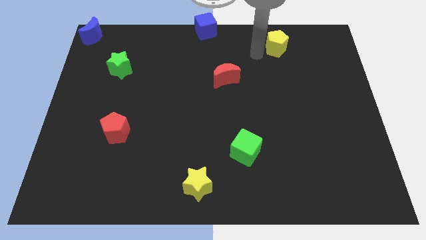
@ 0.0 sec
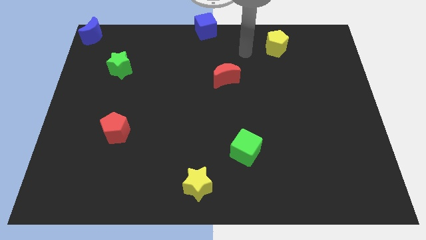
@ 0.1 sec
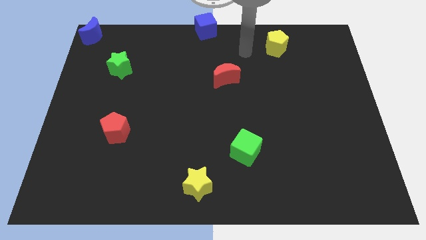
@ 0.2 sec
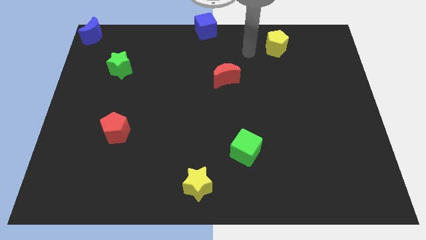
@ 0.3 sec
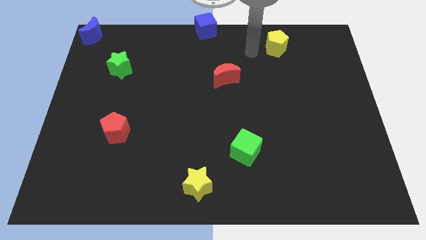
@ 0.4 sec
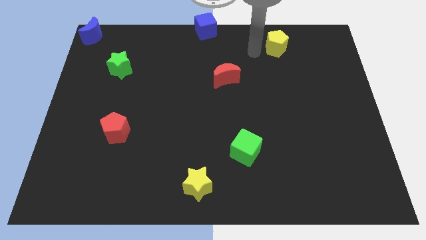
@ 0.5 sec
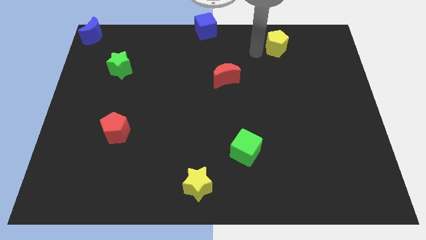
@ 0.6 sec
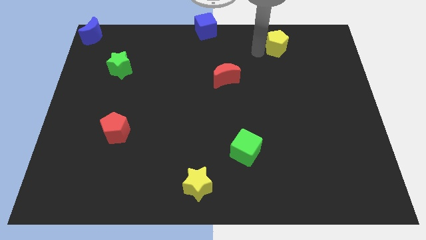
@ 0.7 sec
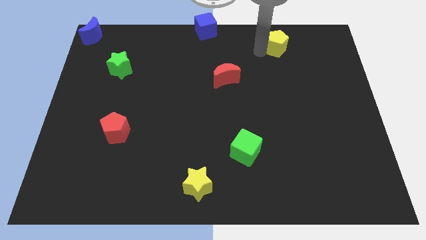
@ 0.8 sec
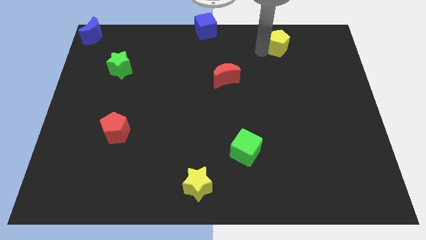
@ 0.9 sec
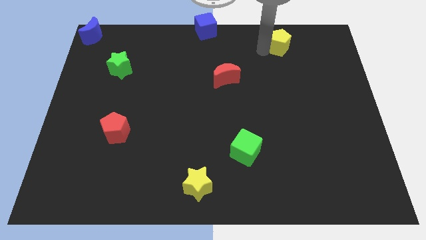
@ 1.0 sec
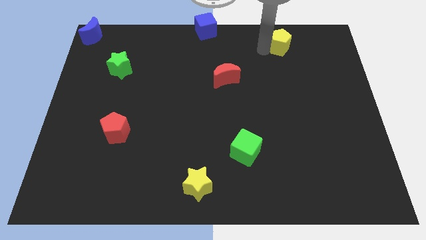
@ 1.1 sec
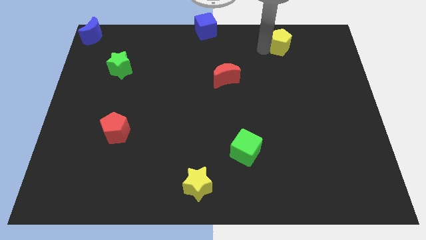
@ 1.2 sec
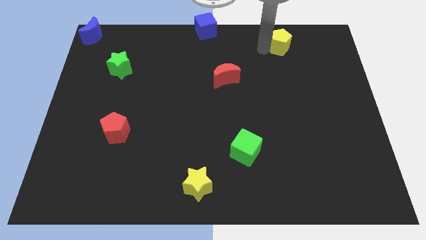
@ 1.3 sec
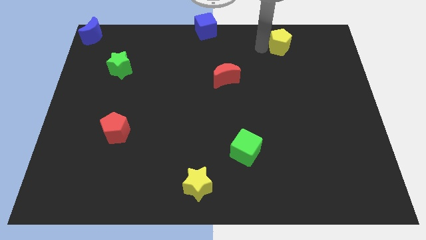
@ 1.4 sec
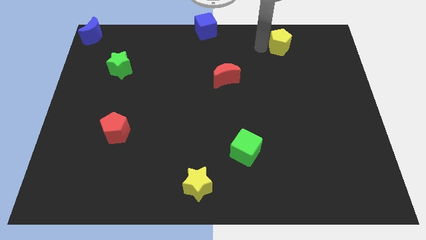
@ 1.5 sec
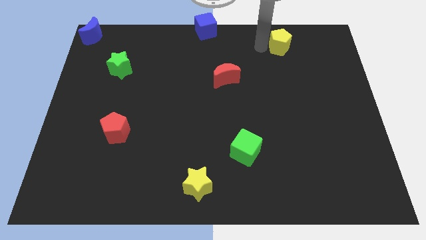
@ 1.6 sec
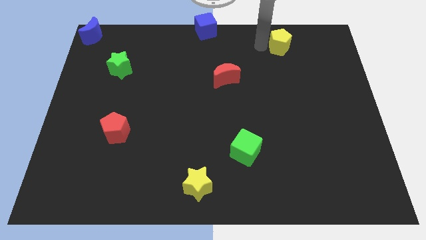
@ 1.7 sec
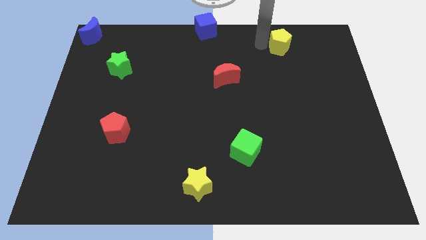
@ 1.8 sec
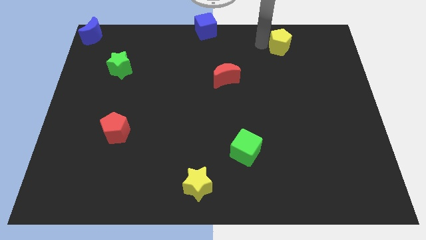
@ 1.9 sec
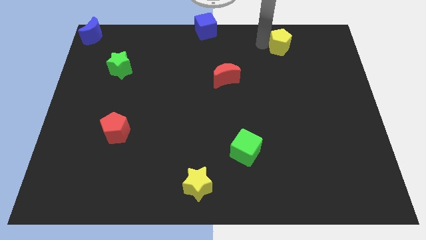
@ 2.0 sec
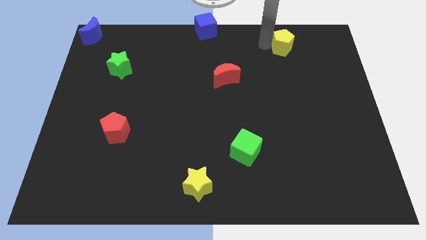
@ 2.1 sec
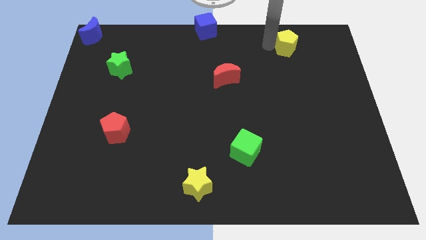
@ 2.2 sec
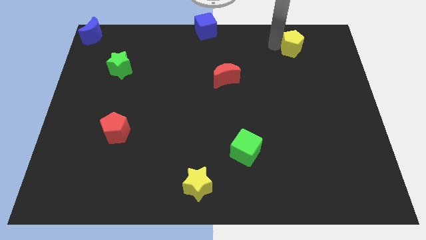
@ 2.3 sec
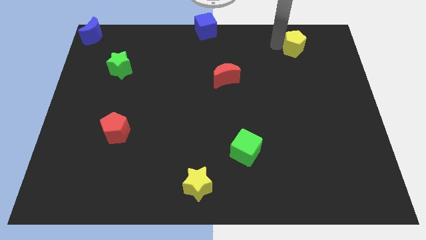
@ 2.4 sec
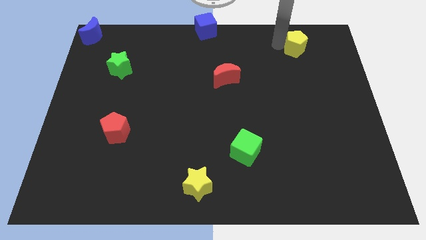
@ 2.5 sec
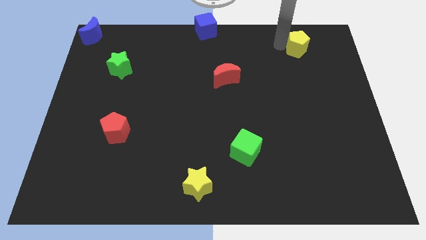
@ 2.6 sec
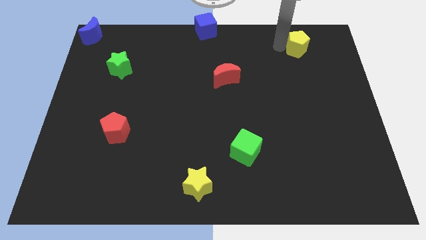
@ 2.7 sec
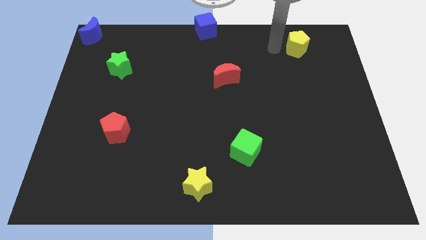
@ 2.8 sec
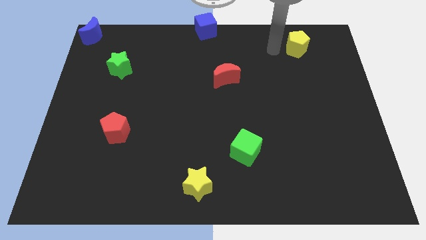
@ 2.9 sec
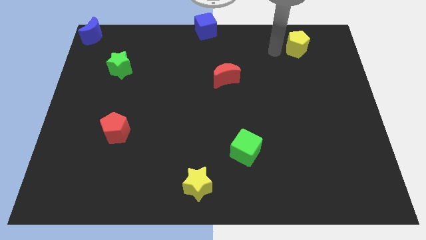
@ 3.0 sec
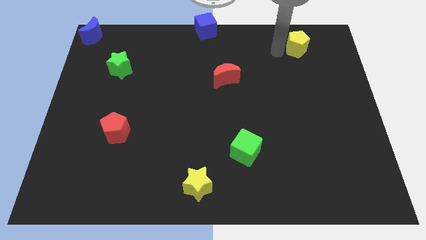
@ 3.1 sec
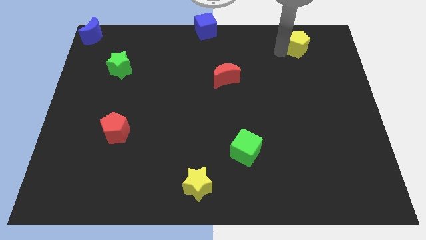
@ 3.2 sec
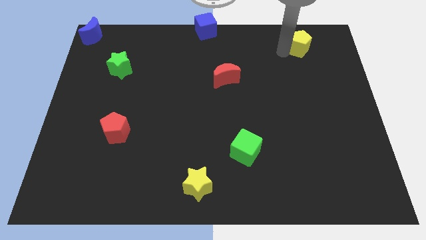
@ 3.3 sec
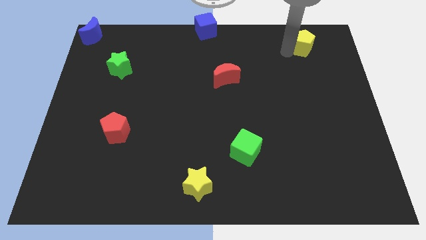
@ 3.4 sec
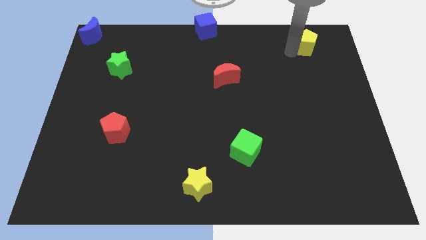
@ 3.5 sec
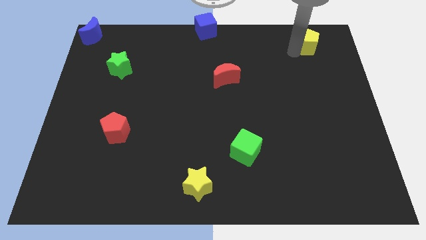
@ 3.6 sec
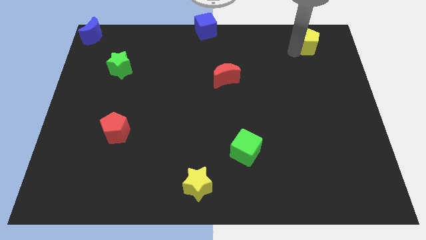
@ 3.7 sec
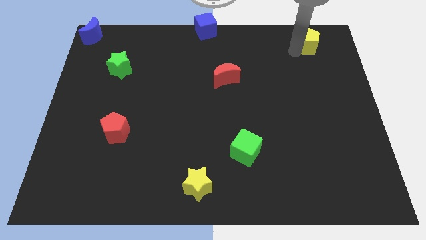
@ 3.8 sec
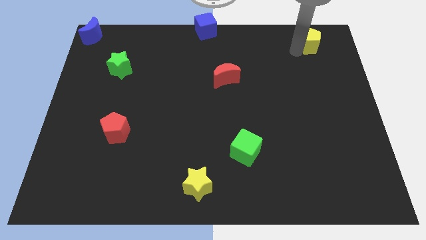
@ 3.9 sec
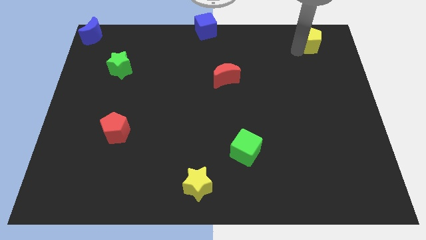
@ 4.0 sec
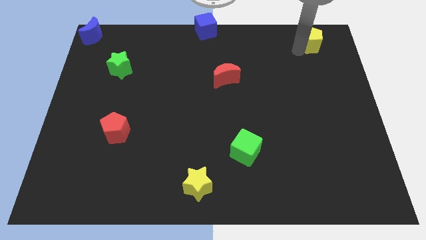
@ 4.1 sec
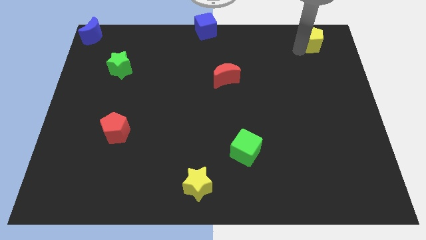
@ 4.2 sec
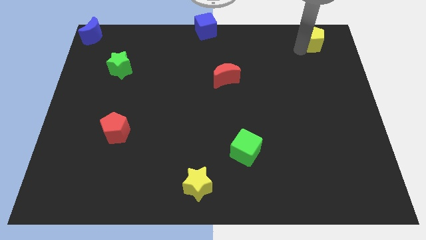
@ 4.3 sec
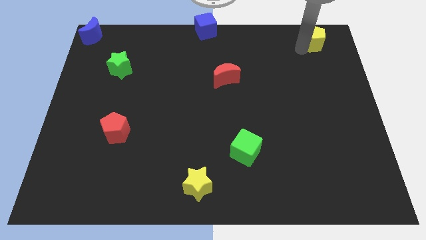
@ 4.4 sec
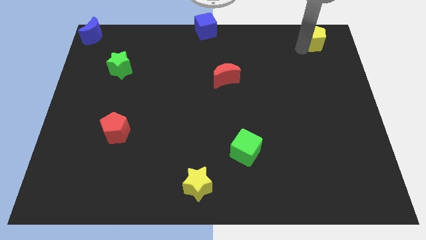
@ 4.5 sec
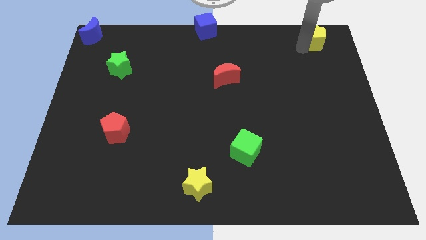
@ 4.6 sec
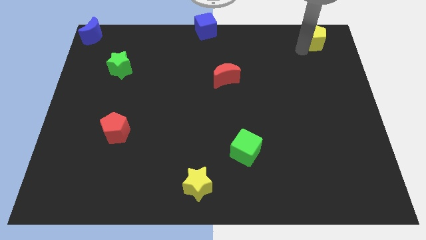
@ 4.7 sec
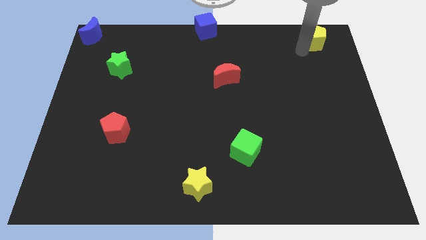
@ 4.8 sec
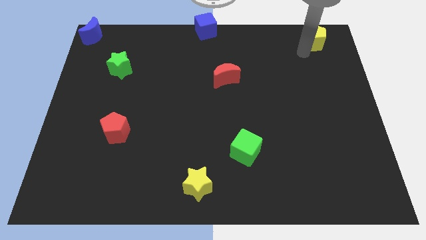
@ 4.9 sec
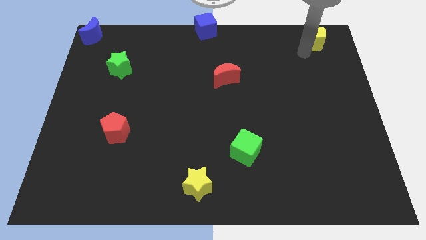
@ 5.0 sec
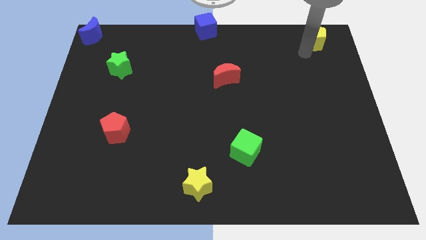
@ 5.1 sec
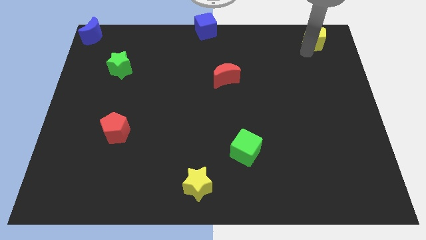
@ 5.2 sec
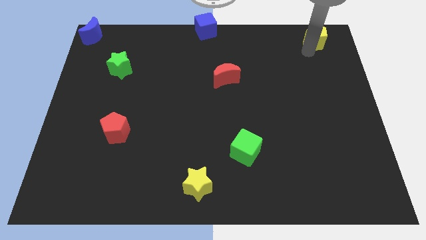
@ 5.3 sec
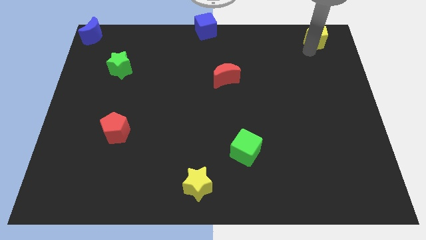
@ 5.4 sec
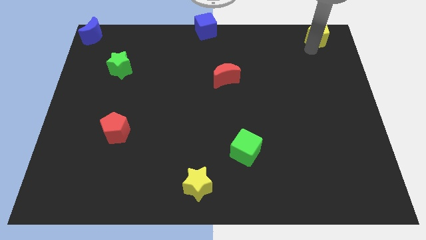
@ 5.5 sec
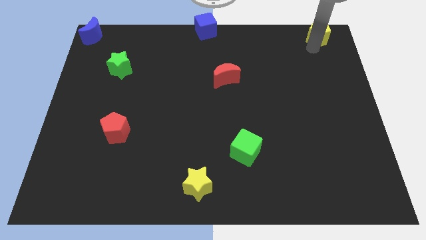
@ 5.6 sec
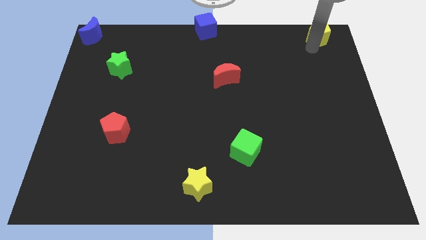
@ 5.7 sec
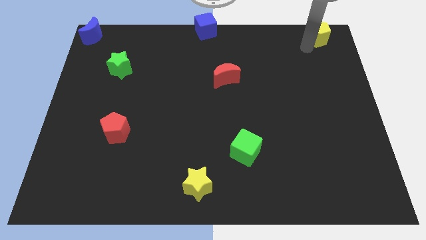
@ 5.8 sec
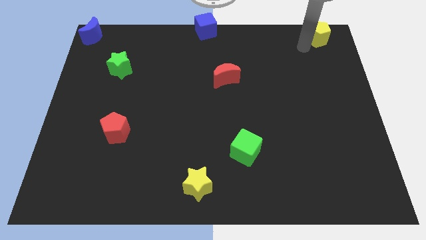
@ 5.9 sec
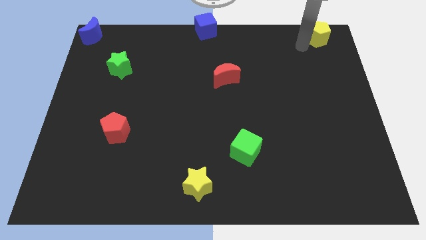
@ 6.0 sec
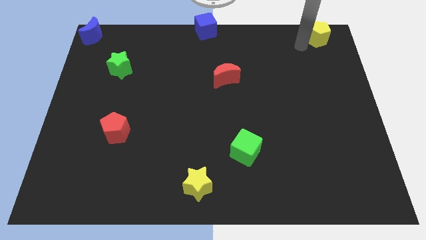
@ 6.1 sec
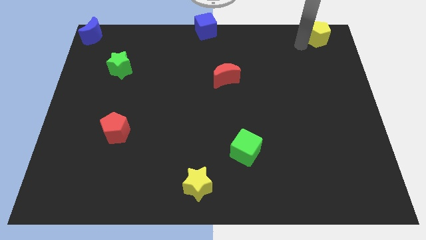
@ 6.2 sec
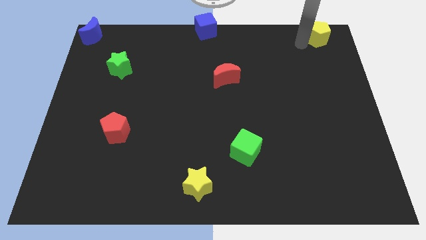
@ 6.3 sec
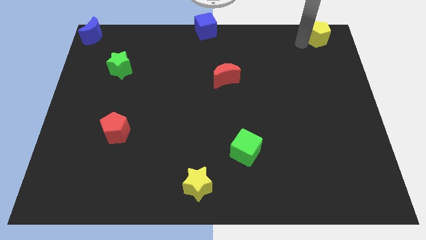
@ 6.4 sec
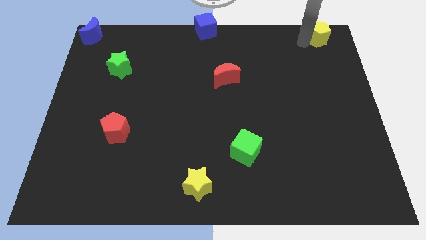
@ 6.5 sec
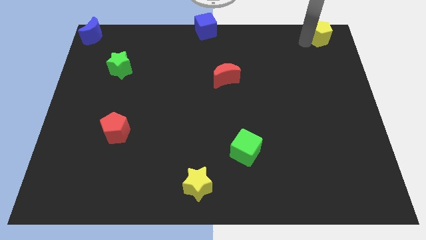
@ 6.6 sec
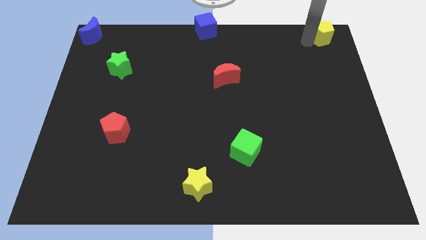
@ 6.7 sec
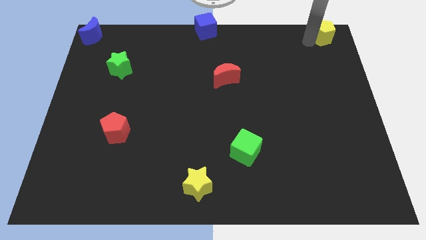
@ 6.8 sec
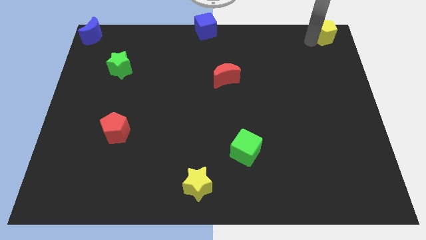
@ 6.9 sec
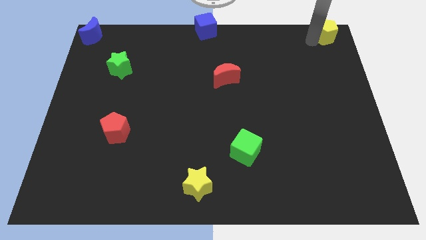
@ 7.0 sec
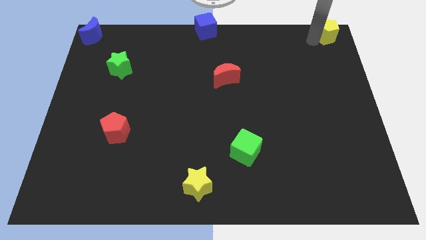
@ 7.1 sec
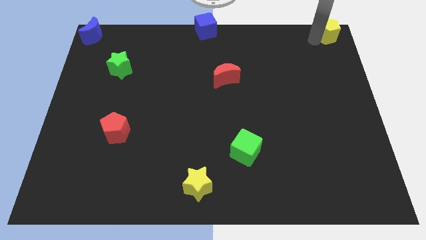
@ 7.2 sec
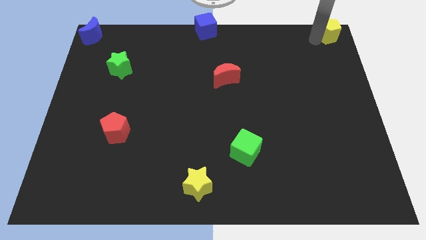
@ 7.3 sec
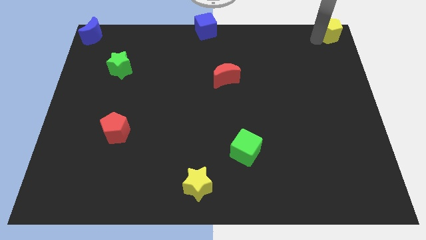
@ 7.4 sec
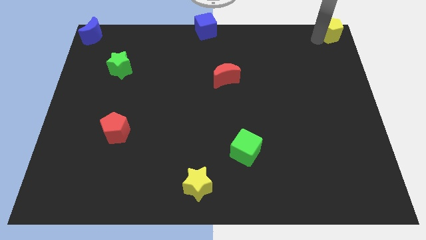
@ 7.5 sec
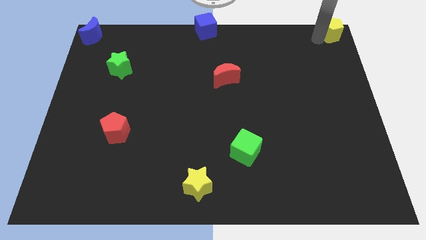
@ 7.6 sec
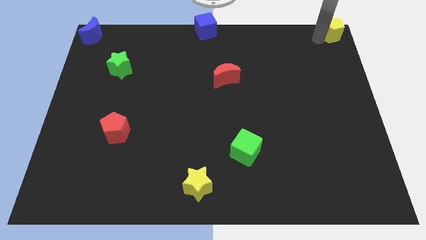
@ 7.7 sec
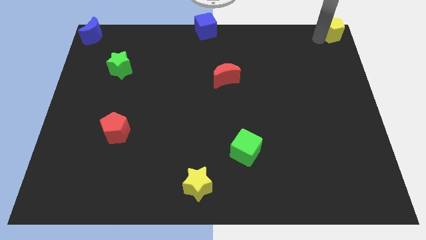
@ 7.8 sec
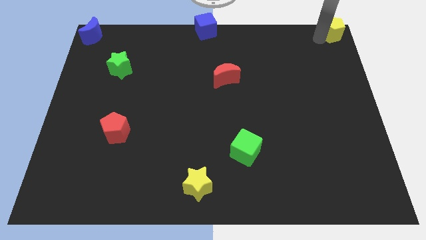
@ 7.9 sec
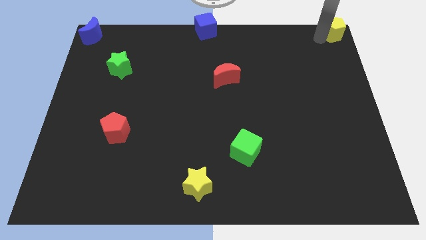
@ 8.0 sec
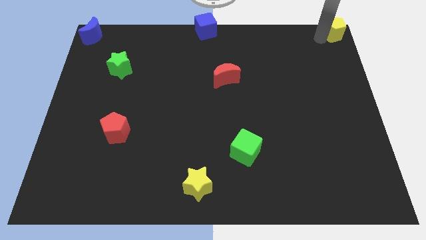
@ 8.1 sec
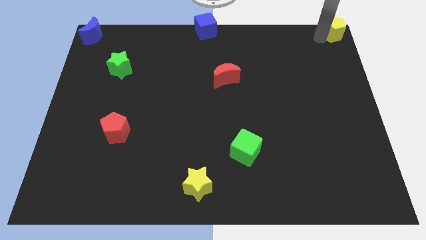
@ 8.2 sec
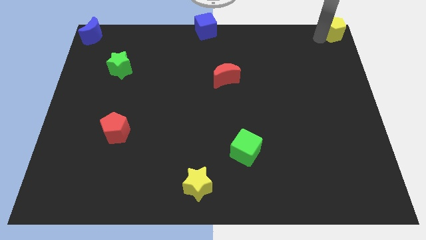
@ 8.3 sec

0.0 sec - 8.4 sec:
take the yellow pentagon to the top right corner of the board

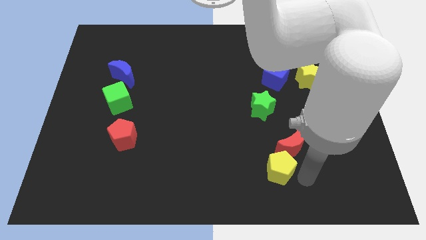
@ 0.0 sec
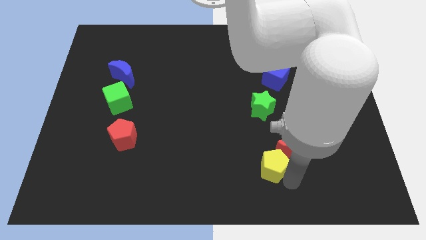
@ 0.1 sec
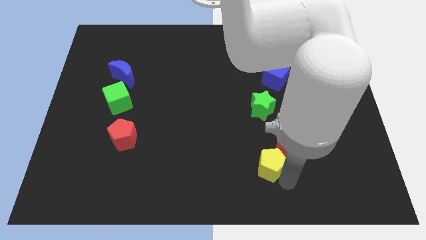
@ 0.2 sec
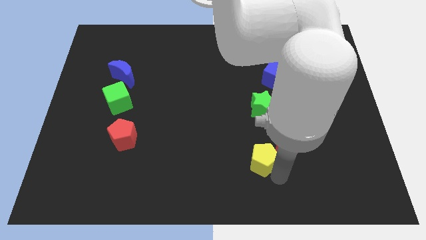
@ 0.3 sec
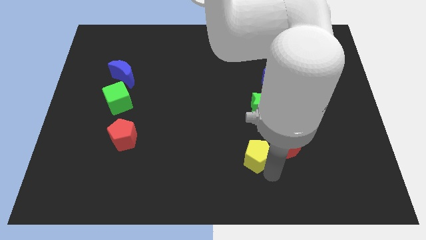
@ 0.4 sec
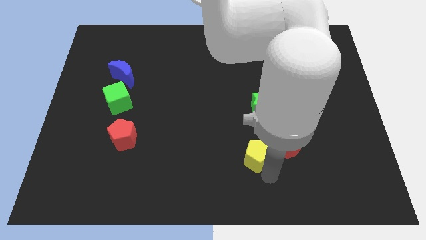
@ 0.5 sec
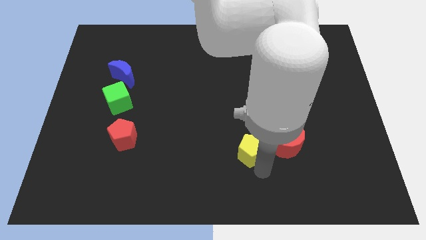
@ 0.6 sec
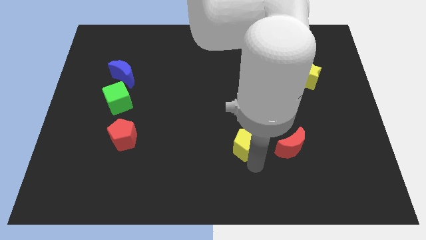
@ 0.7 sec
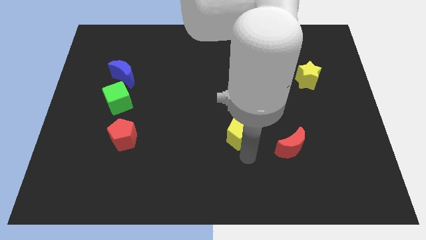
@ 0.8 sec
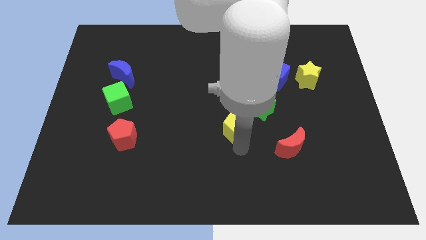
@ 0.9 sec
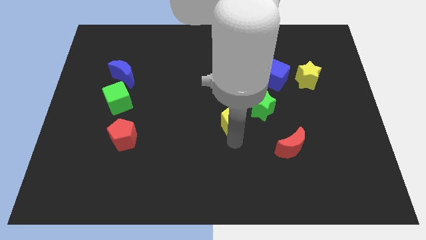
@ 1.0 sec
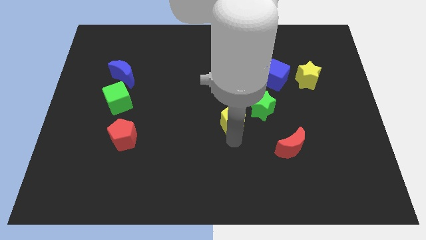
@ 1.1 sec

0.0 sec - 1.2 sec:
separate yellow pentagon from red moon
